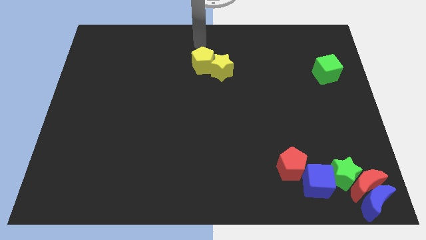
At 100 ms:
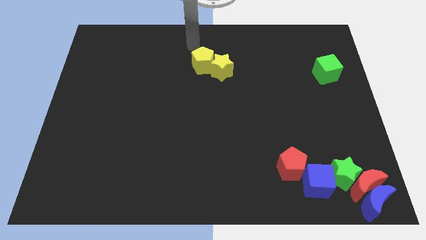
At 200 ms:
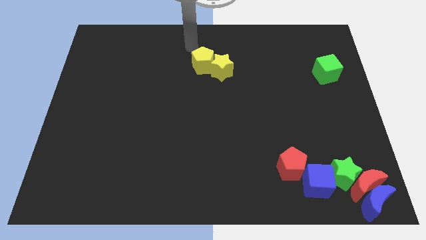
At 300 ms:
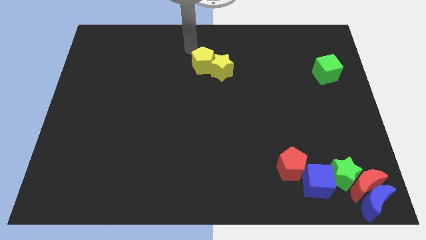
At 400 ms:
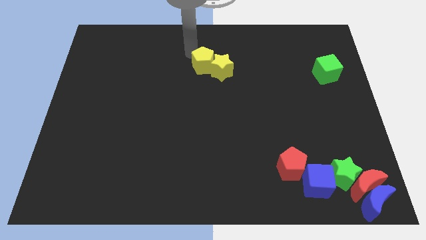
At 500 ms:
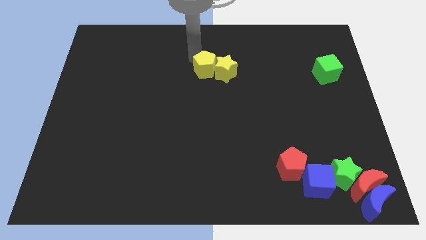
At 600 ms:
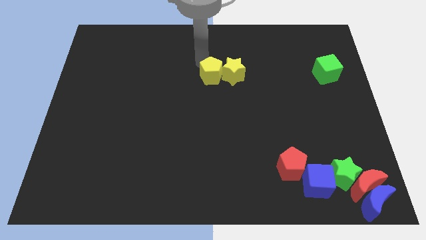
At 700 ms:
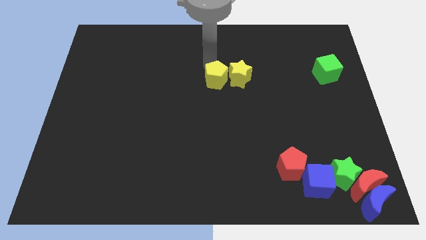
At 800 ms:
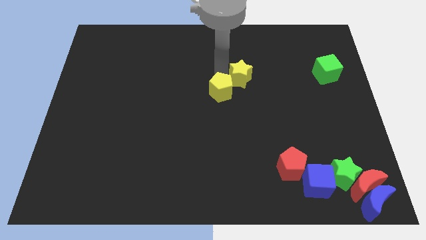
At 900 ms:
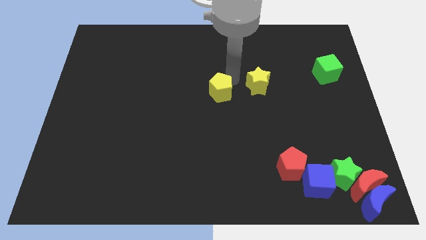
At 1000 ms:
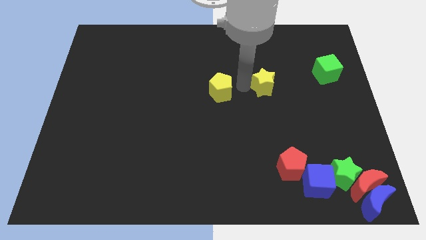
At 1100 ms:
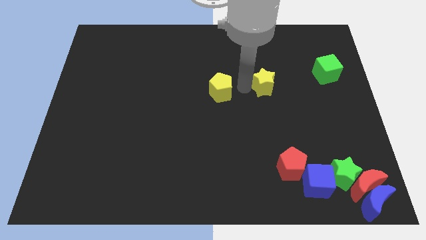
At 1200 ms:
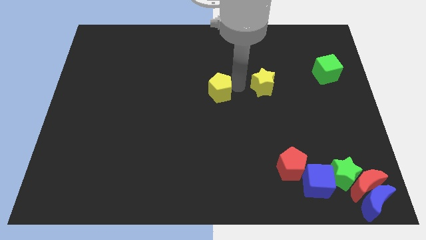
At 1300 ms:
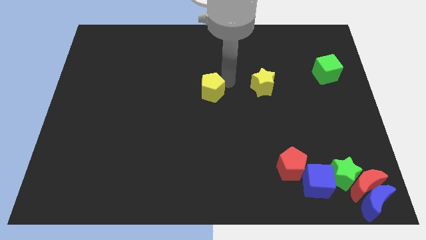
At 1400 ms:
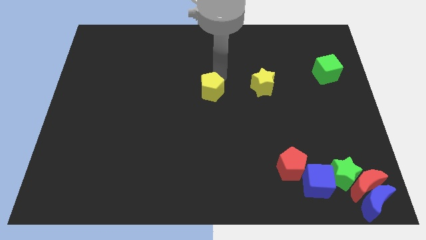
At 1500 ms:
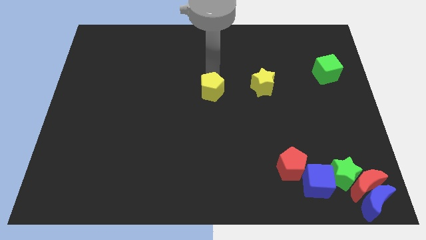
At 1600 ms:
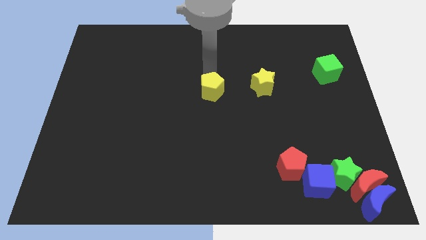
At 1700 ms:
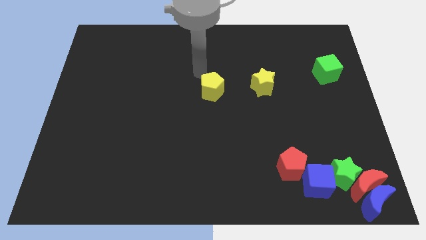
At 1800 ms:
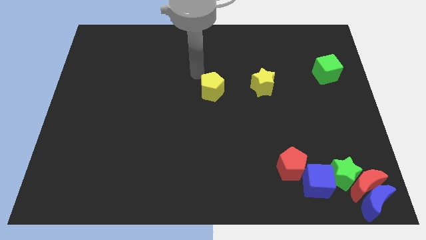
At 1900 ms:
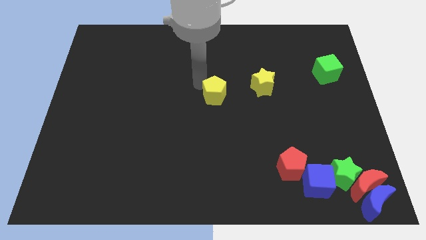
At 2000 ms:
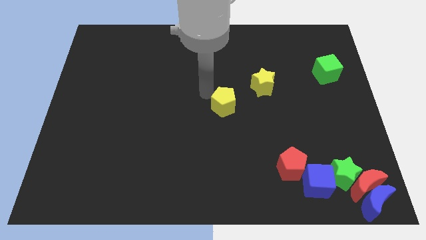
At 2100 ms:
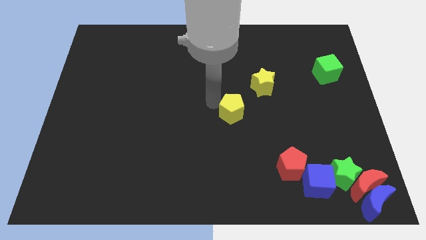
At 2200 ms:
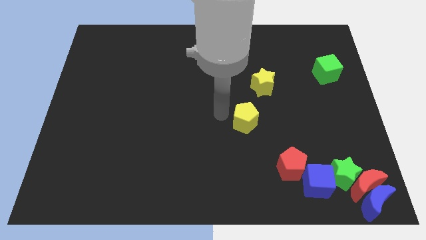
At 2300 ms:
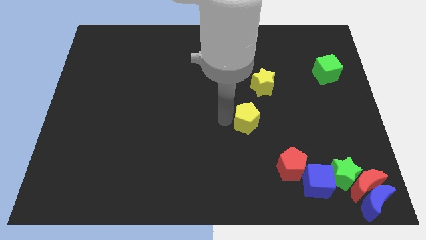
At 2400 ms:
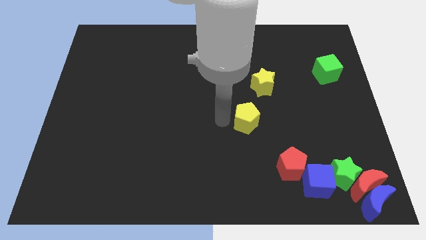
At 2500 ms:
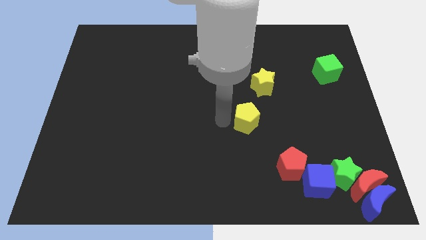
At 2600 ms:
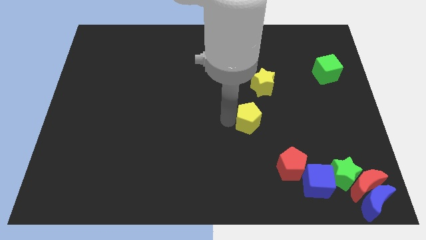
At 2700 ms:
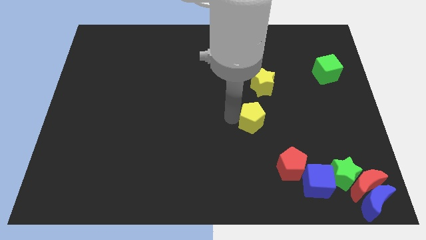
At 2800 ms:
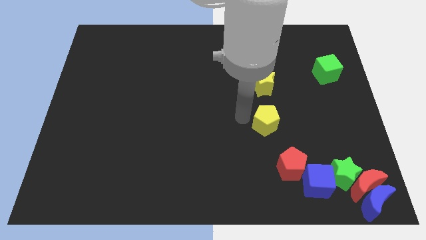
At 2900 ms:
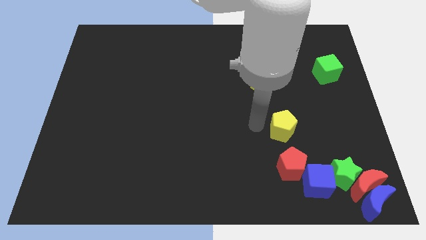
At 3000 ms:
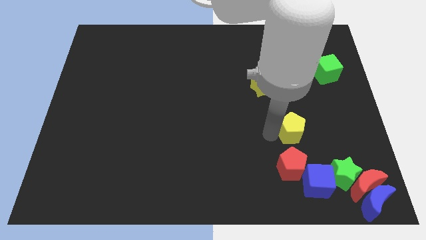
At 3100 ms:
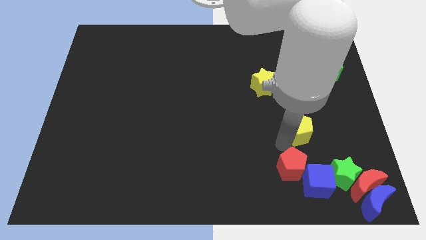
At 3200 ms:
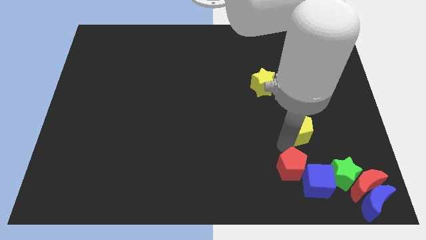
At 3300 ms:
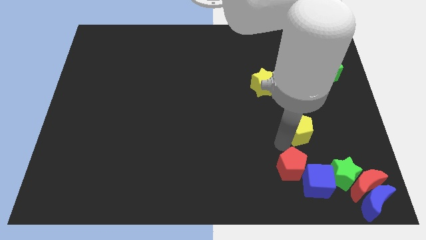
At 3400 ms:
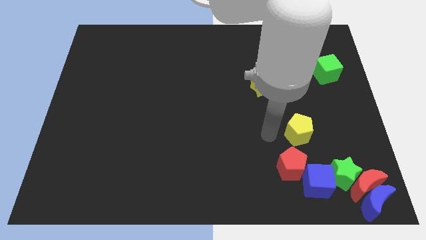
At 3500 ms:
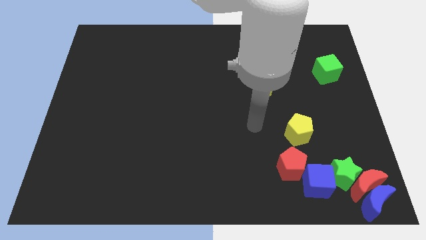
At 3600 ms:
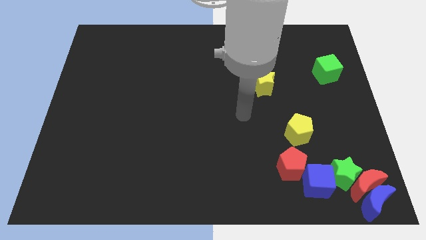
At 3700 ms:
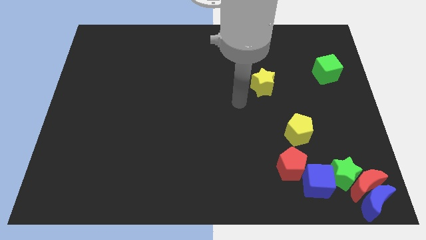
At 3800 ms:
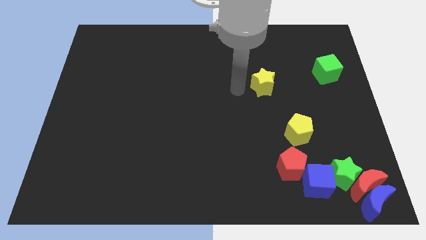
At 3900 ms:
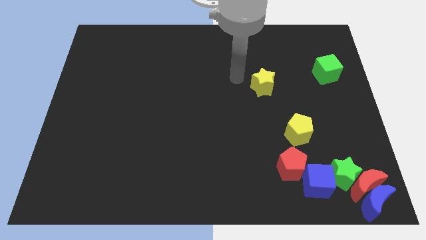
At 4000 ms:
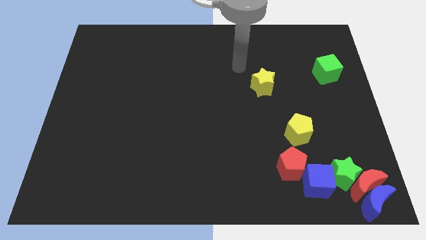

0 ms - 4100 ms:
separate the yellow pentagon from the yellow star

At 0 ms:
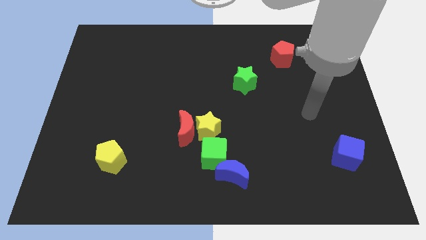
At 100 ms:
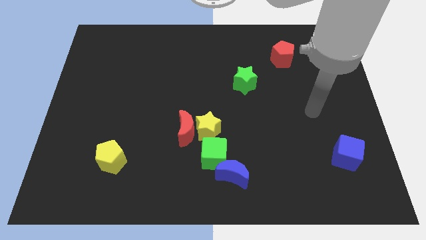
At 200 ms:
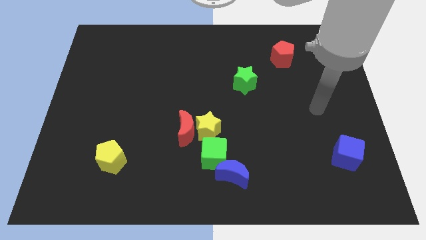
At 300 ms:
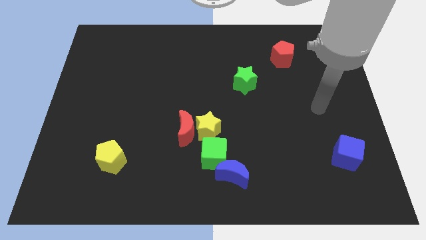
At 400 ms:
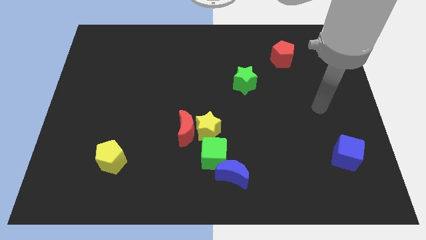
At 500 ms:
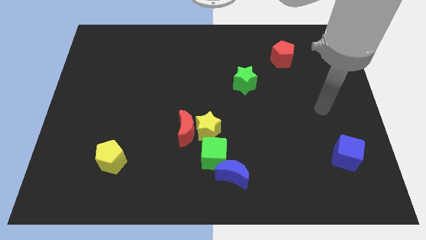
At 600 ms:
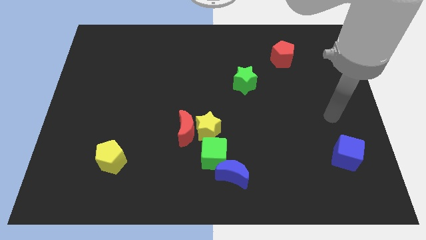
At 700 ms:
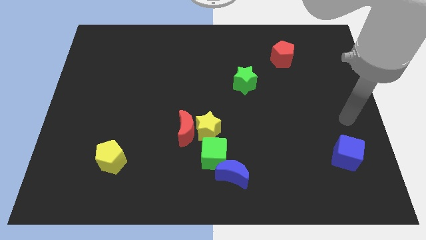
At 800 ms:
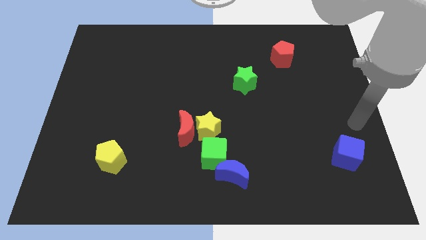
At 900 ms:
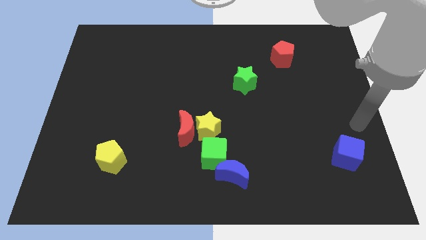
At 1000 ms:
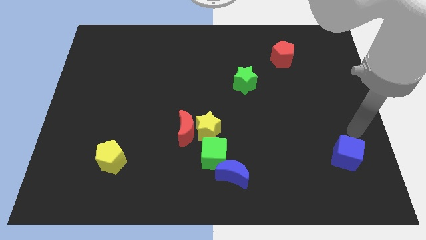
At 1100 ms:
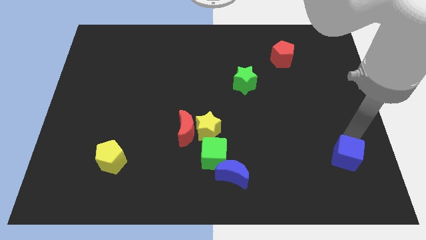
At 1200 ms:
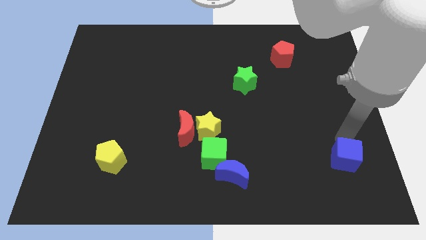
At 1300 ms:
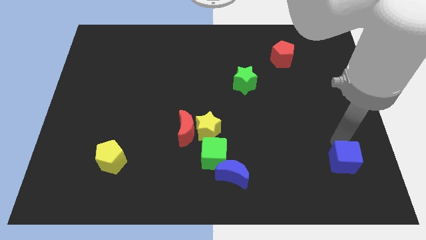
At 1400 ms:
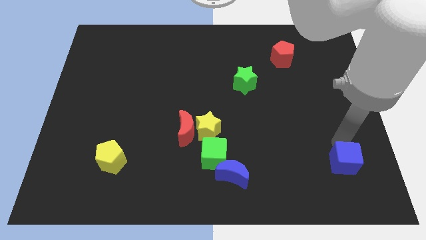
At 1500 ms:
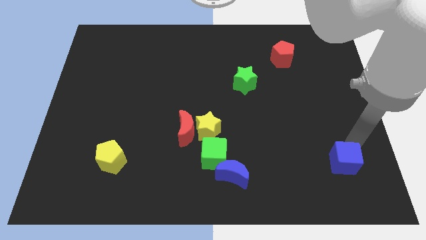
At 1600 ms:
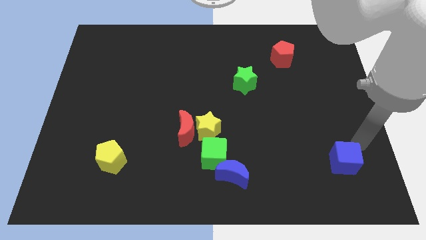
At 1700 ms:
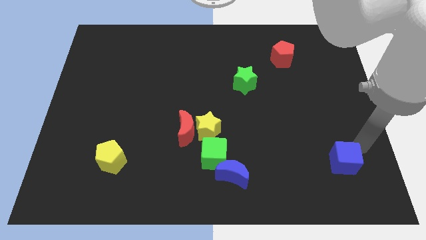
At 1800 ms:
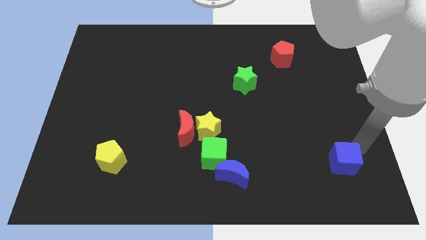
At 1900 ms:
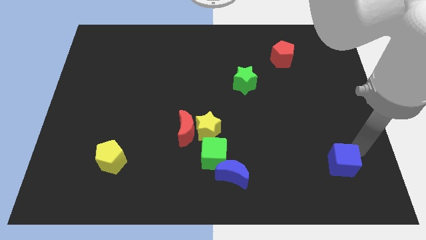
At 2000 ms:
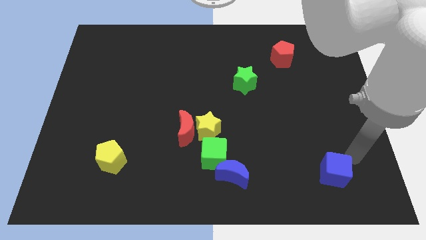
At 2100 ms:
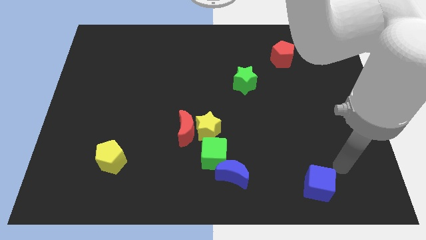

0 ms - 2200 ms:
move the blue cube towards the bottom of the board

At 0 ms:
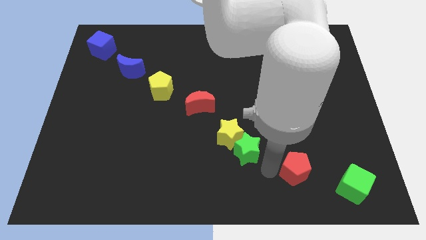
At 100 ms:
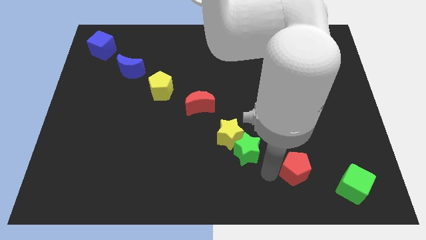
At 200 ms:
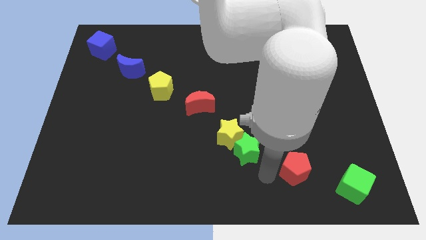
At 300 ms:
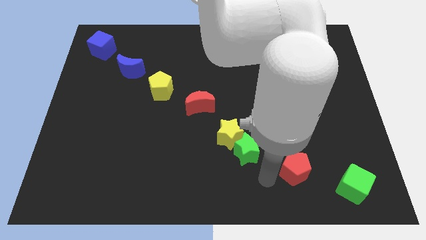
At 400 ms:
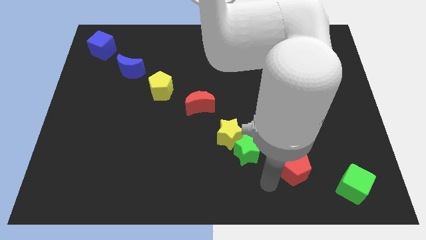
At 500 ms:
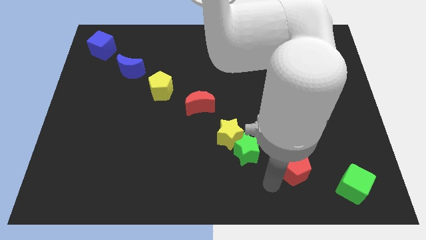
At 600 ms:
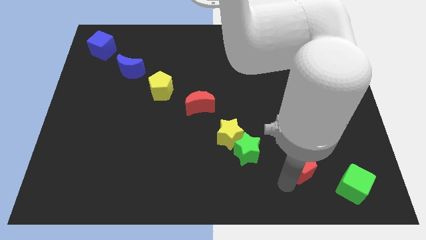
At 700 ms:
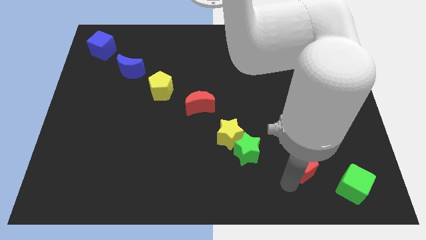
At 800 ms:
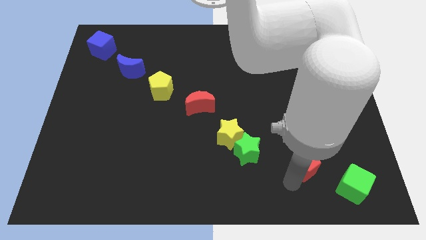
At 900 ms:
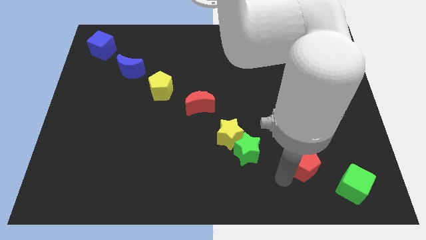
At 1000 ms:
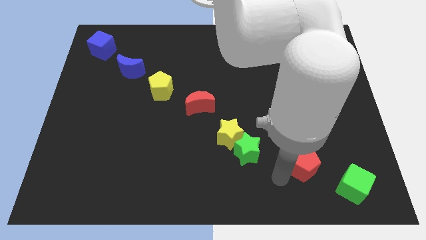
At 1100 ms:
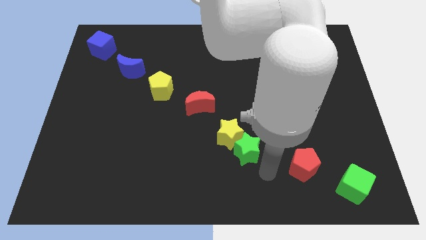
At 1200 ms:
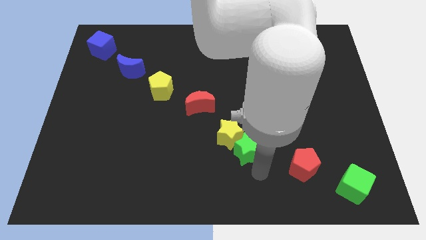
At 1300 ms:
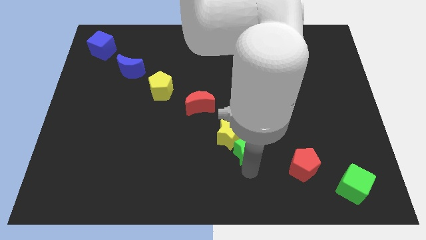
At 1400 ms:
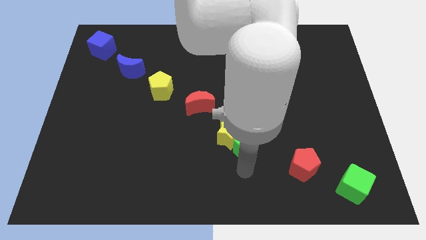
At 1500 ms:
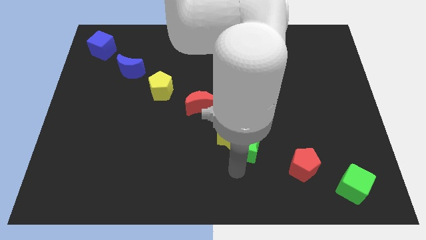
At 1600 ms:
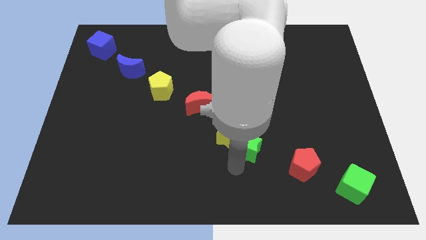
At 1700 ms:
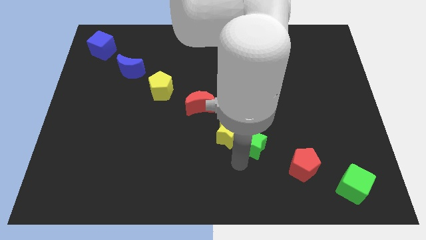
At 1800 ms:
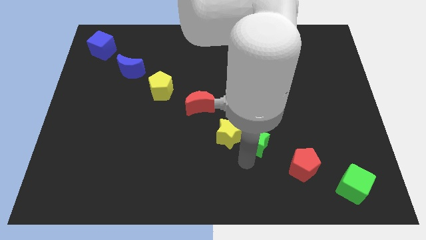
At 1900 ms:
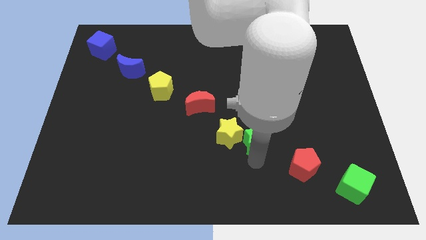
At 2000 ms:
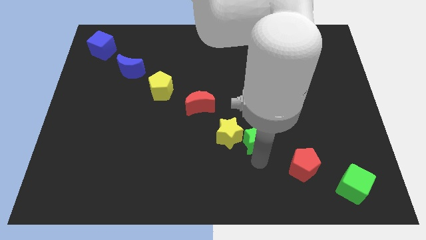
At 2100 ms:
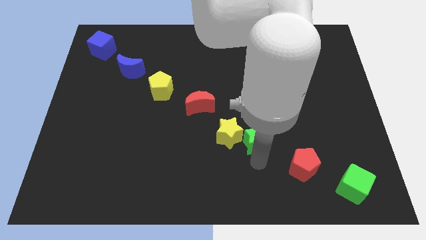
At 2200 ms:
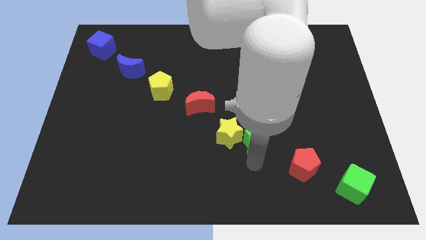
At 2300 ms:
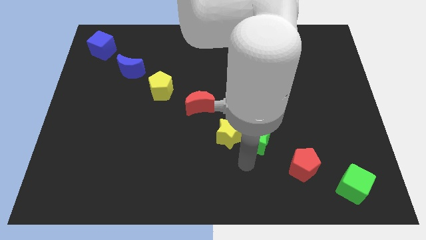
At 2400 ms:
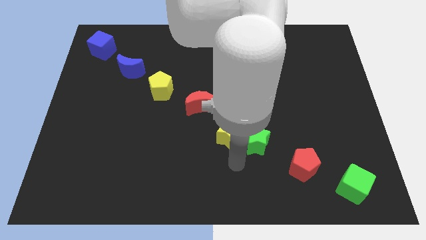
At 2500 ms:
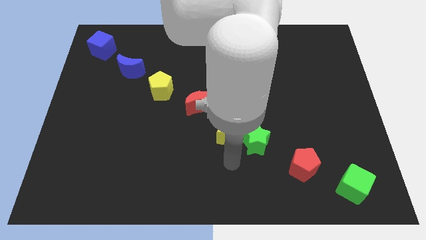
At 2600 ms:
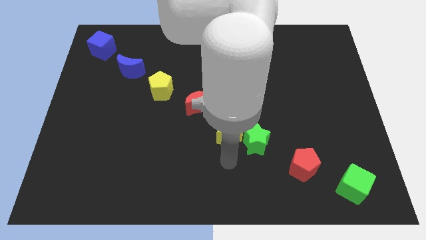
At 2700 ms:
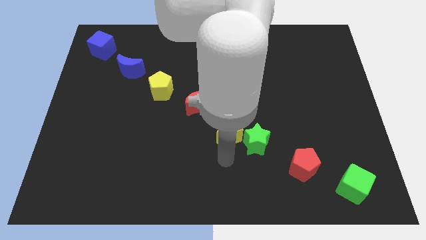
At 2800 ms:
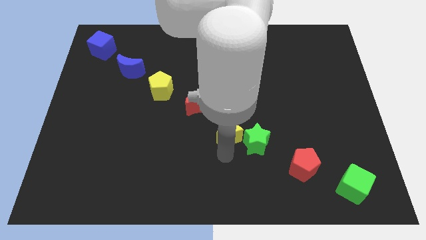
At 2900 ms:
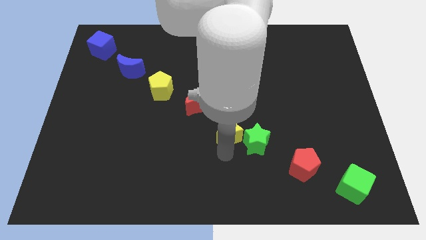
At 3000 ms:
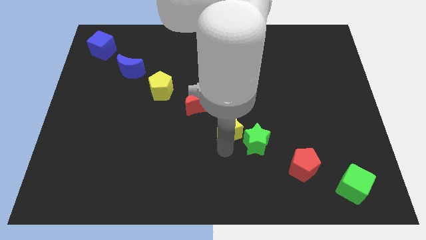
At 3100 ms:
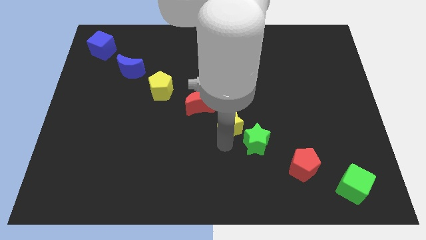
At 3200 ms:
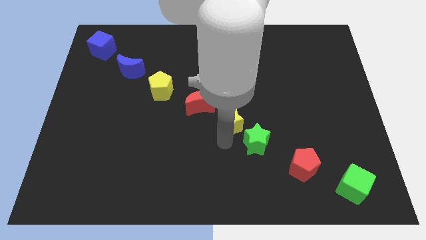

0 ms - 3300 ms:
move slightly the yellow star towards the center the board
